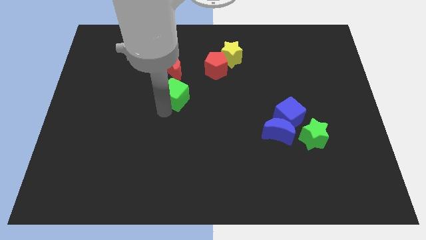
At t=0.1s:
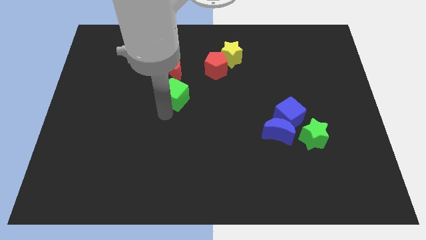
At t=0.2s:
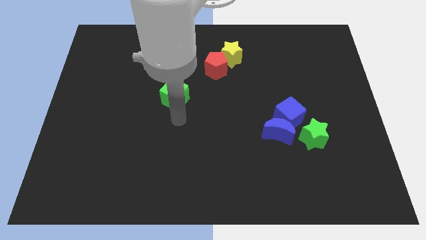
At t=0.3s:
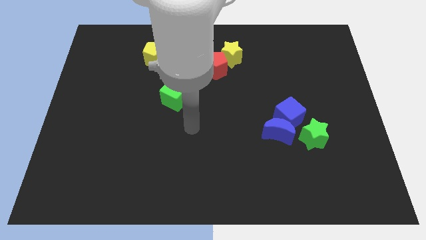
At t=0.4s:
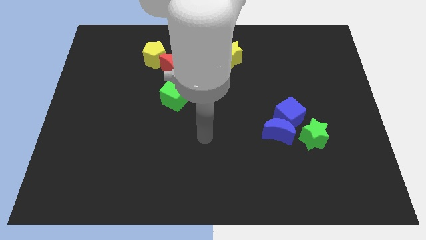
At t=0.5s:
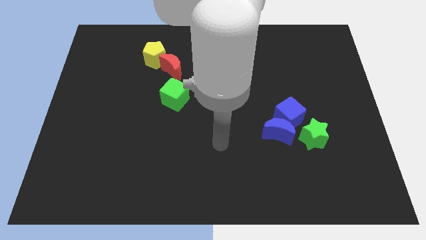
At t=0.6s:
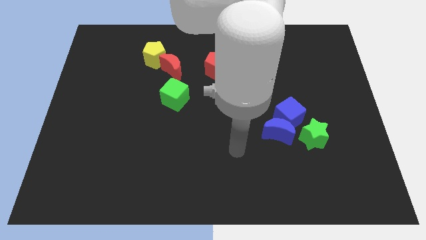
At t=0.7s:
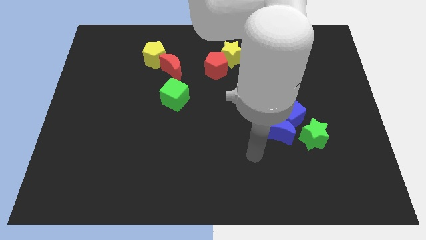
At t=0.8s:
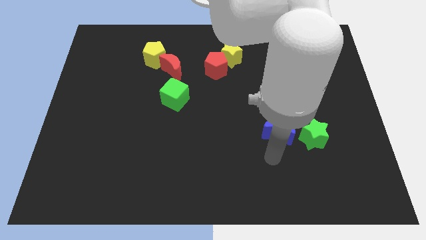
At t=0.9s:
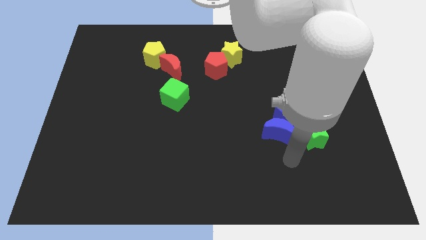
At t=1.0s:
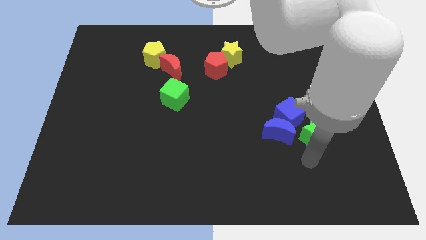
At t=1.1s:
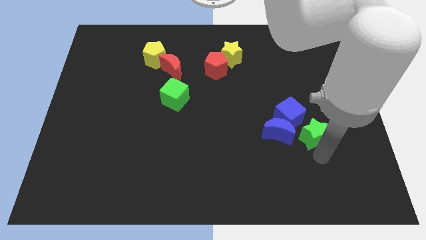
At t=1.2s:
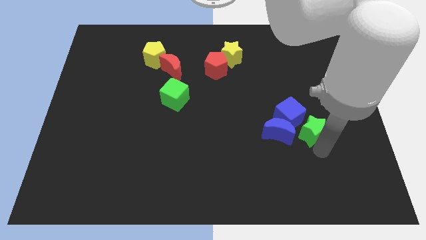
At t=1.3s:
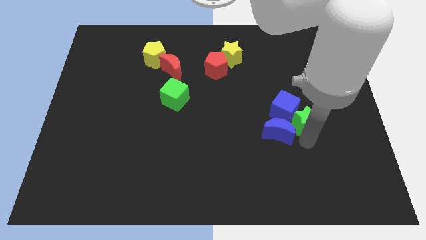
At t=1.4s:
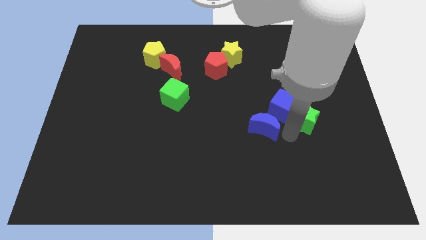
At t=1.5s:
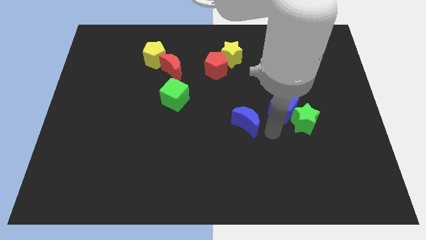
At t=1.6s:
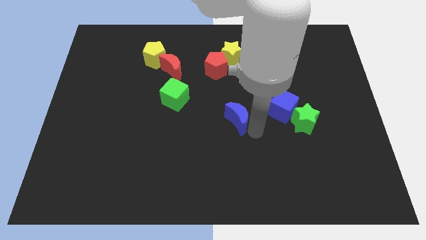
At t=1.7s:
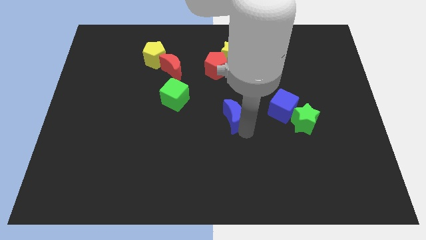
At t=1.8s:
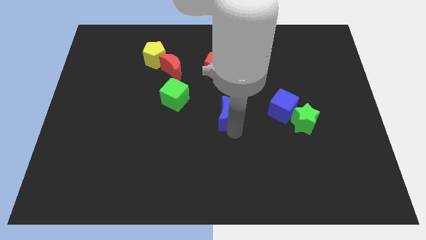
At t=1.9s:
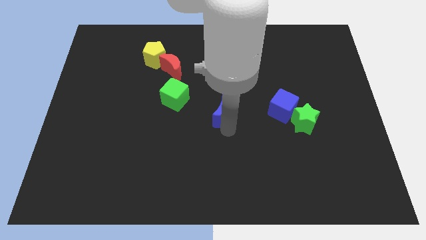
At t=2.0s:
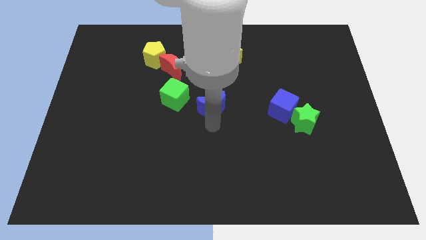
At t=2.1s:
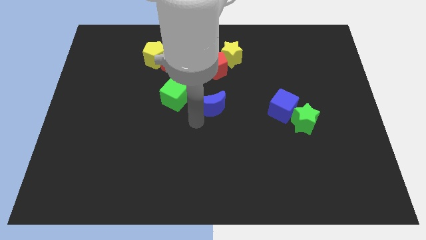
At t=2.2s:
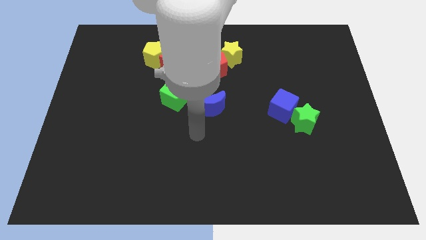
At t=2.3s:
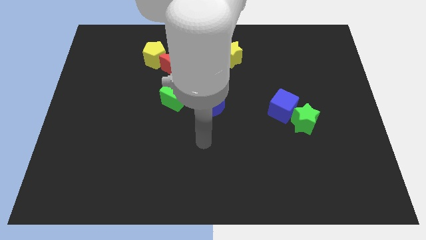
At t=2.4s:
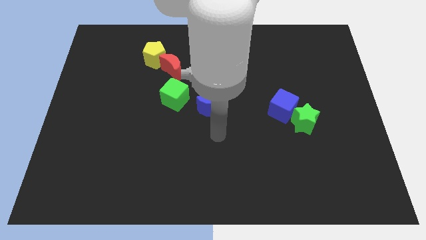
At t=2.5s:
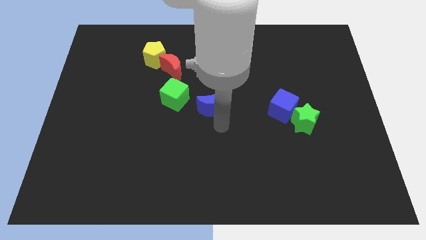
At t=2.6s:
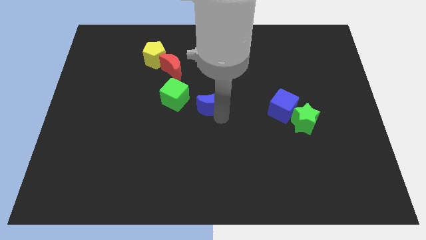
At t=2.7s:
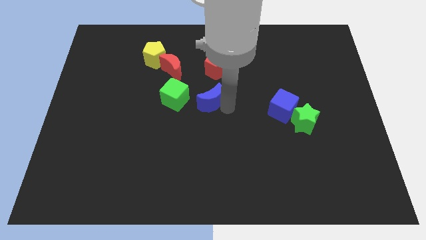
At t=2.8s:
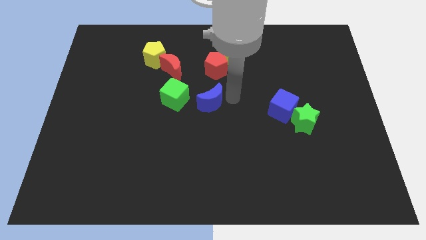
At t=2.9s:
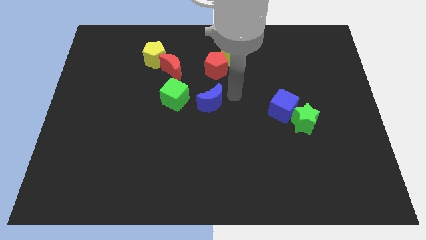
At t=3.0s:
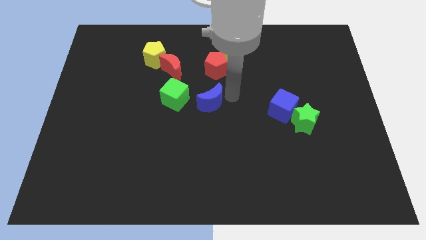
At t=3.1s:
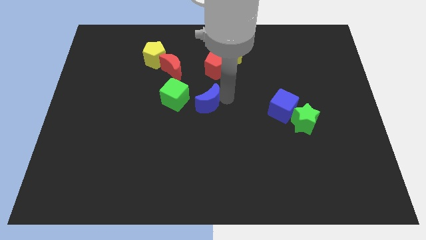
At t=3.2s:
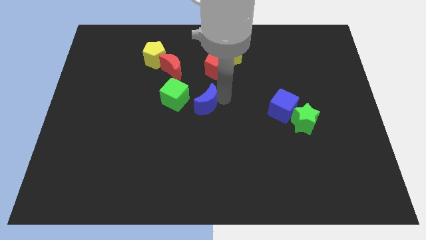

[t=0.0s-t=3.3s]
push the blue moon to the right of the green cube

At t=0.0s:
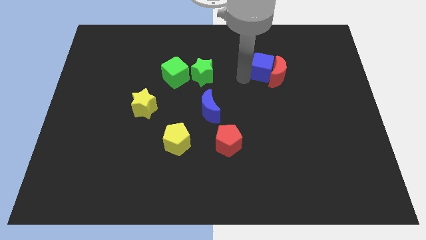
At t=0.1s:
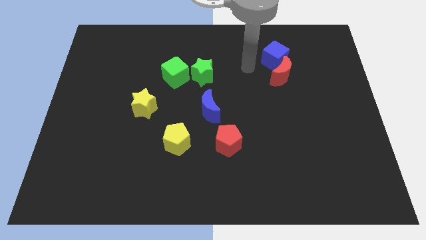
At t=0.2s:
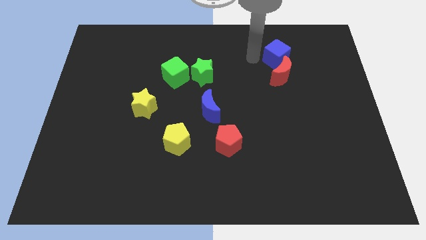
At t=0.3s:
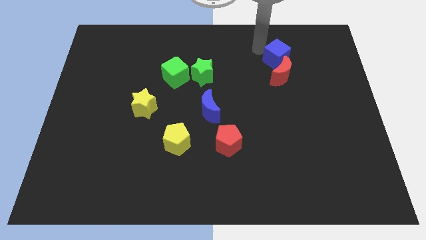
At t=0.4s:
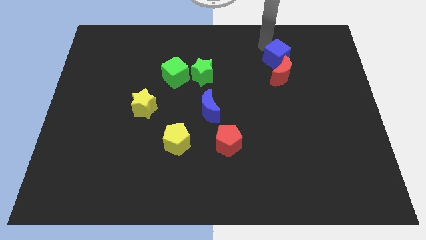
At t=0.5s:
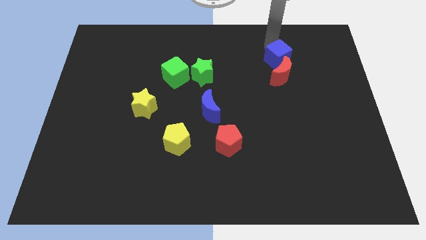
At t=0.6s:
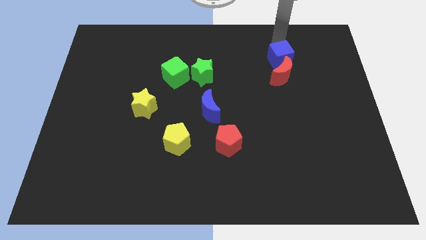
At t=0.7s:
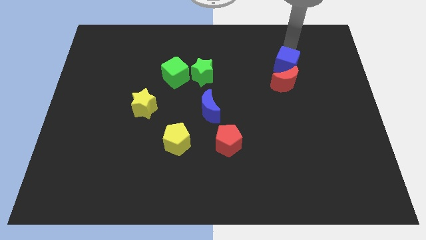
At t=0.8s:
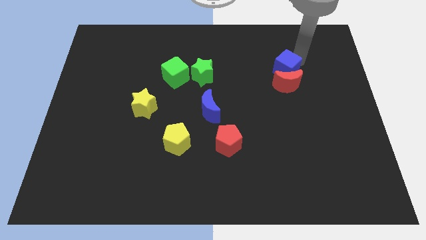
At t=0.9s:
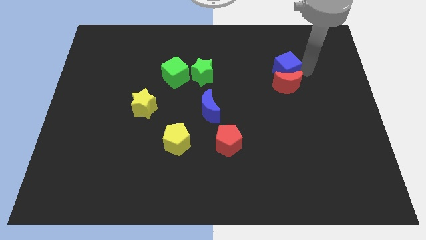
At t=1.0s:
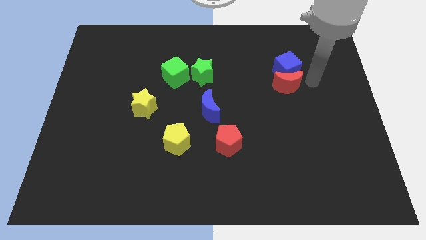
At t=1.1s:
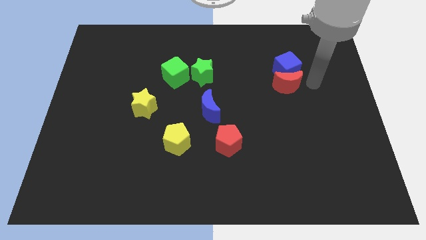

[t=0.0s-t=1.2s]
place blue cube above red crescent

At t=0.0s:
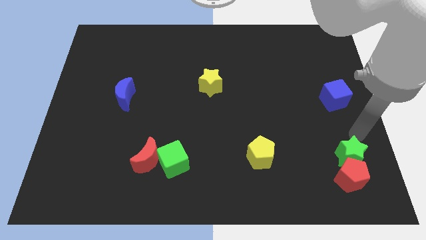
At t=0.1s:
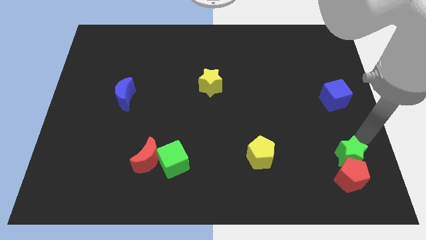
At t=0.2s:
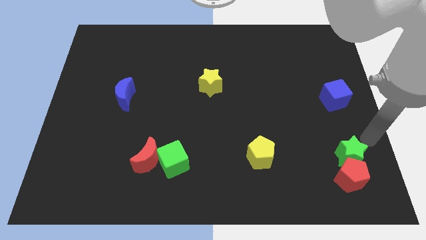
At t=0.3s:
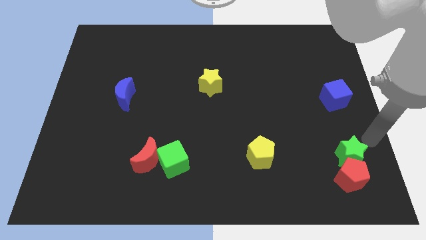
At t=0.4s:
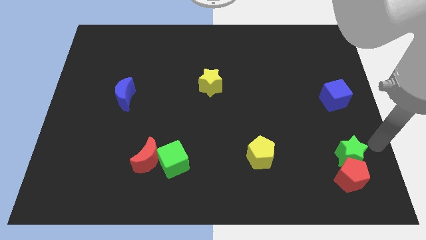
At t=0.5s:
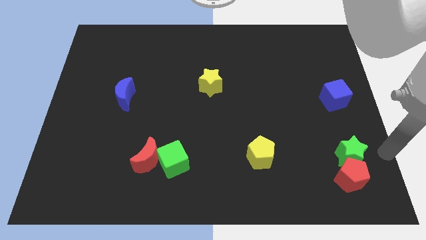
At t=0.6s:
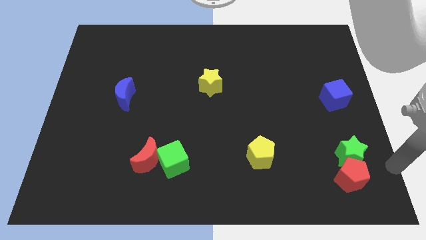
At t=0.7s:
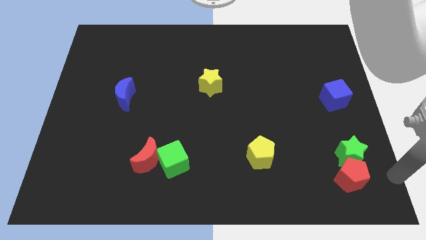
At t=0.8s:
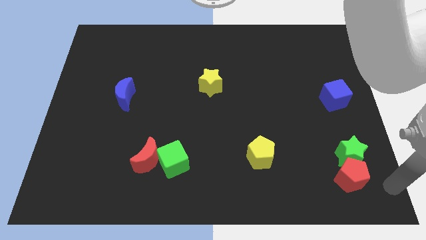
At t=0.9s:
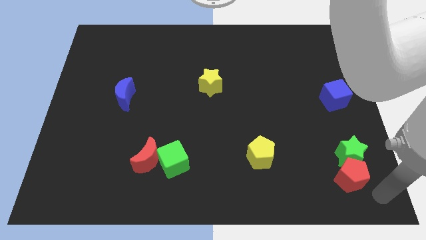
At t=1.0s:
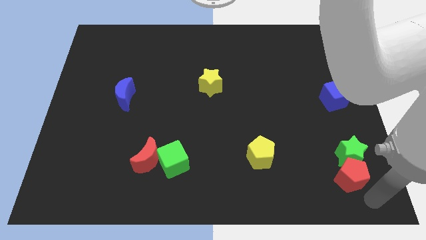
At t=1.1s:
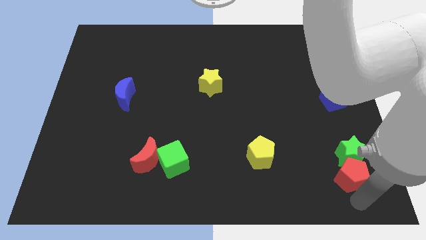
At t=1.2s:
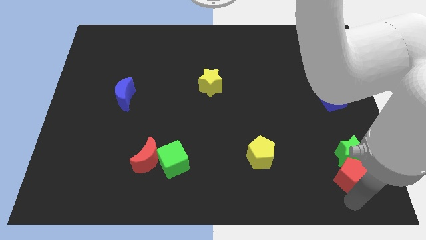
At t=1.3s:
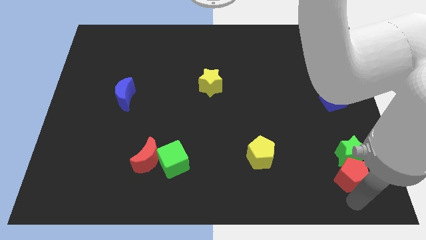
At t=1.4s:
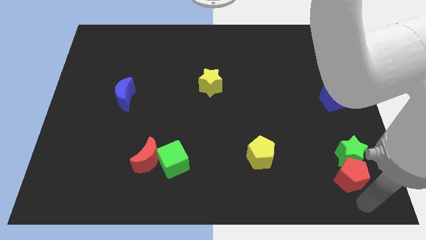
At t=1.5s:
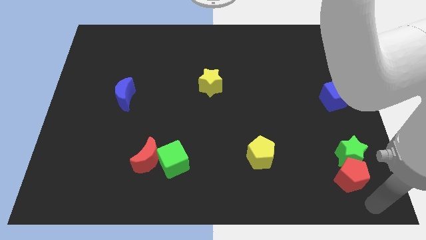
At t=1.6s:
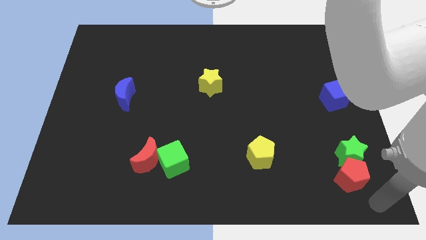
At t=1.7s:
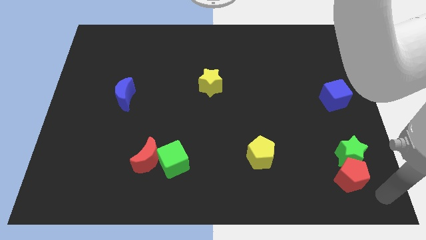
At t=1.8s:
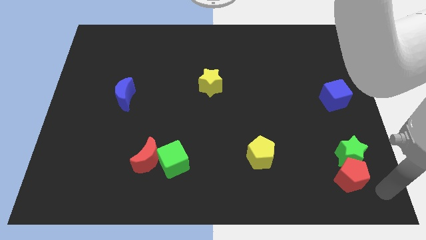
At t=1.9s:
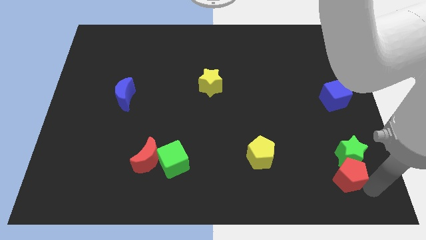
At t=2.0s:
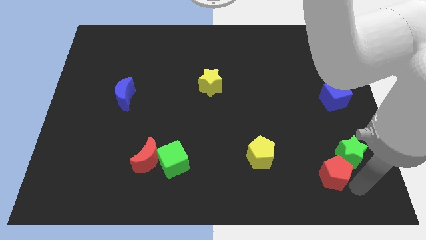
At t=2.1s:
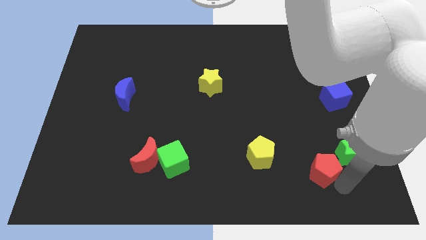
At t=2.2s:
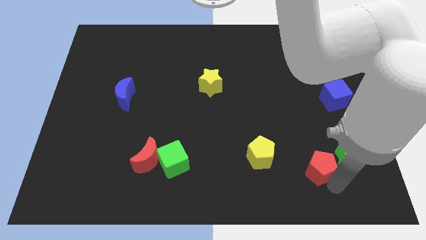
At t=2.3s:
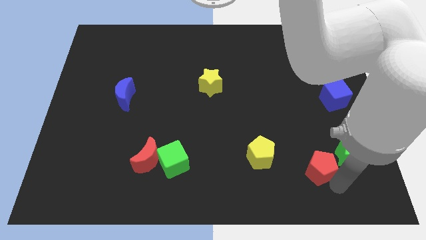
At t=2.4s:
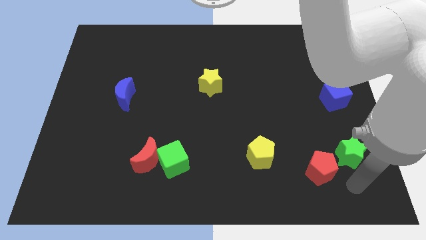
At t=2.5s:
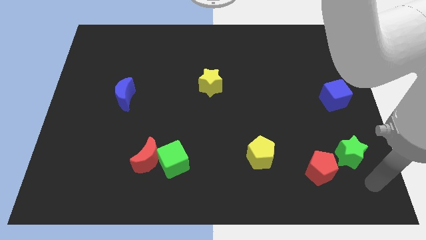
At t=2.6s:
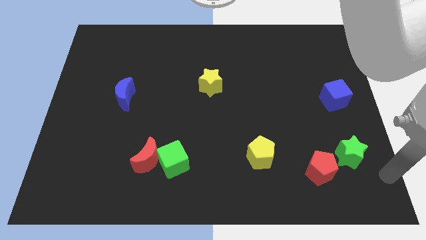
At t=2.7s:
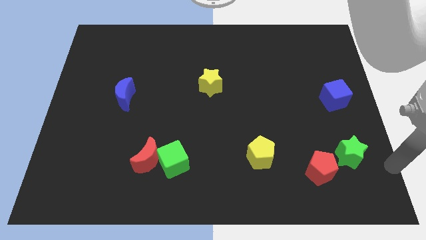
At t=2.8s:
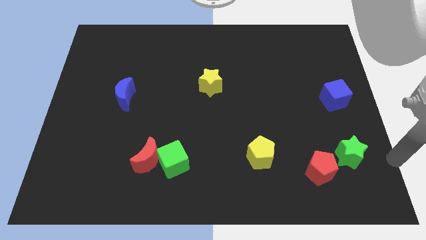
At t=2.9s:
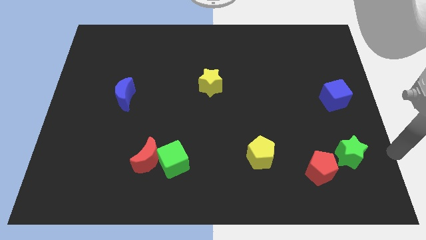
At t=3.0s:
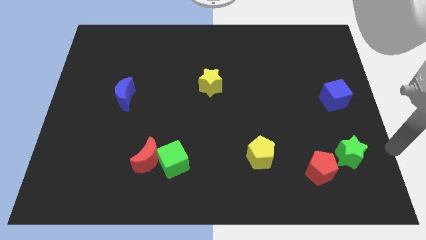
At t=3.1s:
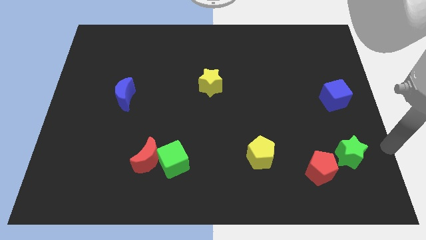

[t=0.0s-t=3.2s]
push the red pentagon to the bottom right

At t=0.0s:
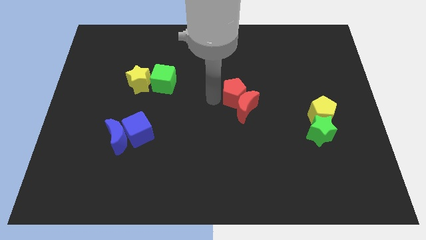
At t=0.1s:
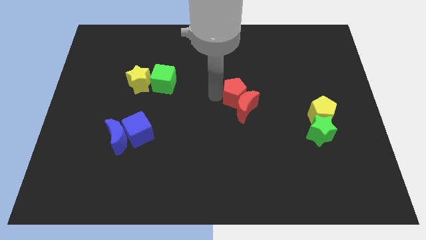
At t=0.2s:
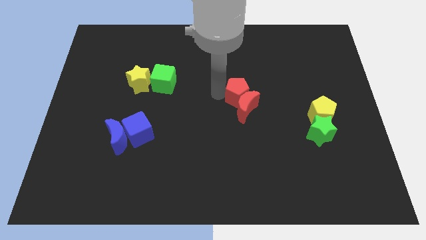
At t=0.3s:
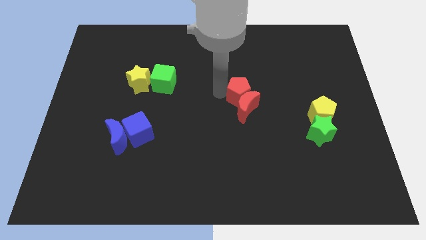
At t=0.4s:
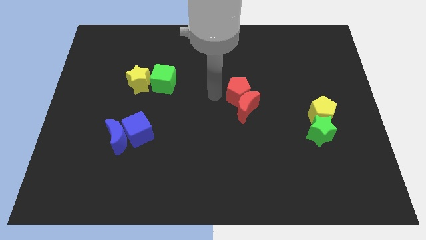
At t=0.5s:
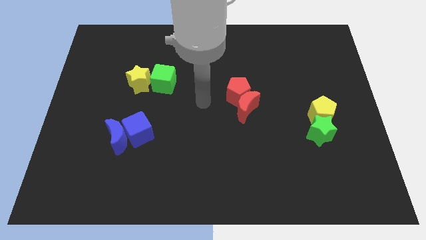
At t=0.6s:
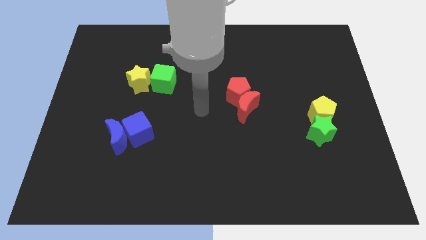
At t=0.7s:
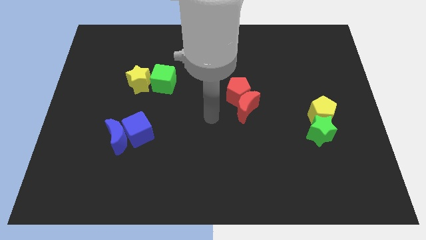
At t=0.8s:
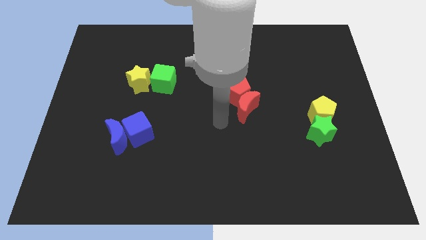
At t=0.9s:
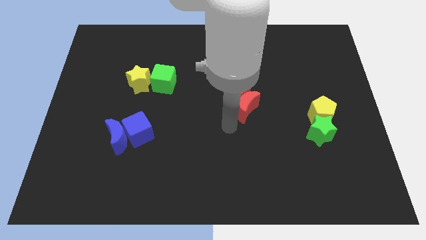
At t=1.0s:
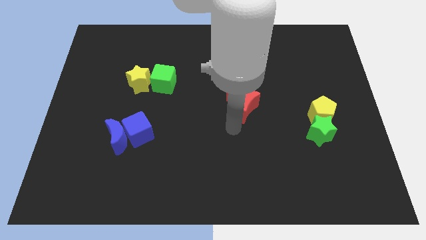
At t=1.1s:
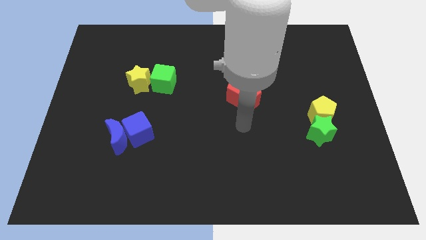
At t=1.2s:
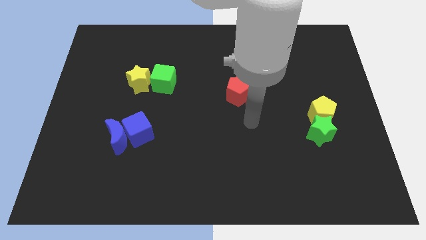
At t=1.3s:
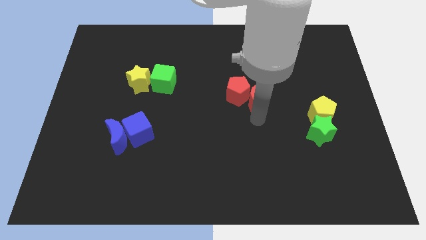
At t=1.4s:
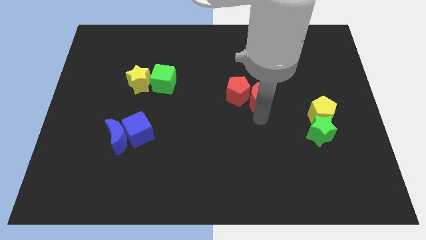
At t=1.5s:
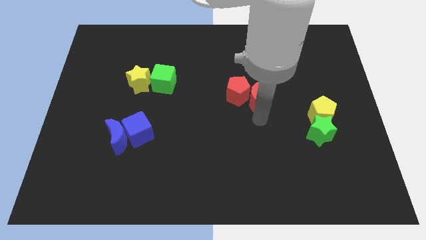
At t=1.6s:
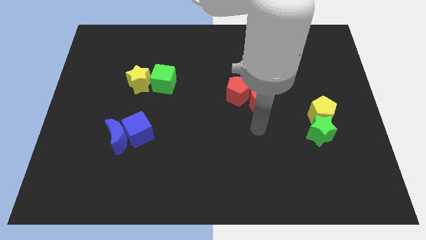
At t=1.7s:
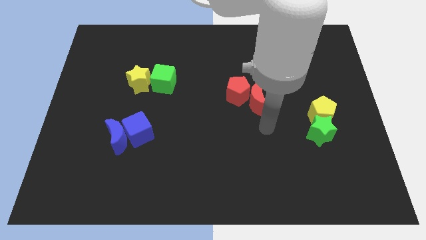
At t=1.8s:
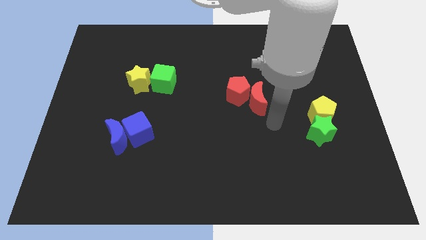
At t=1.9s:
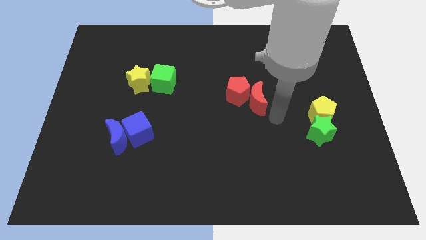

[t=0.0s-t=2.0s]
slightly move the red moon to the right of the red pentagon
